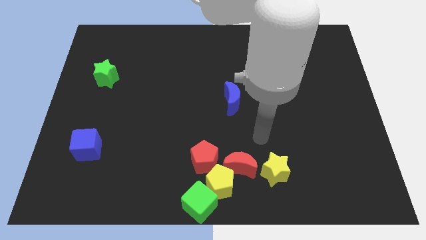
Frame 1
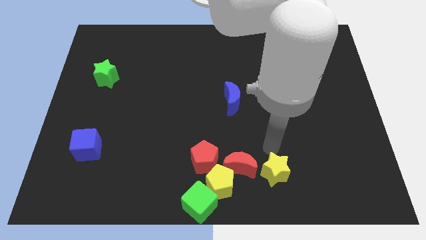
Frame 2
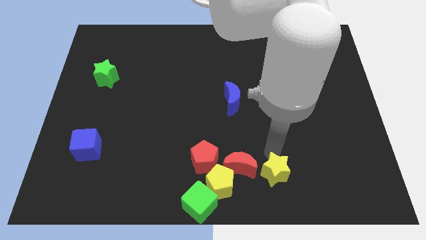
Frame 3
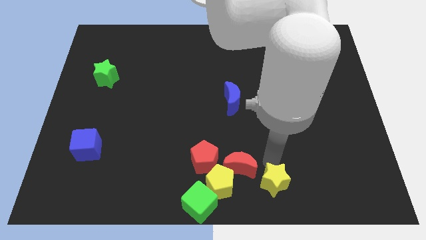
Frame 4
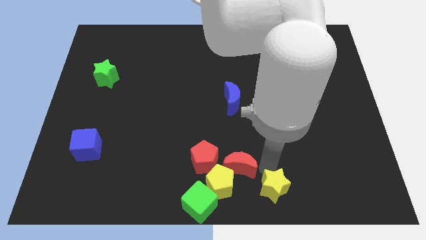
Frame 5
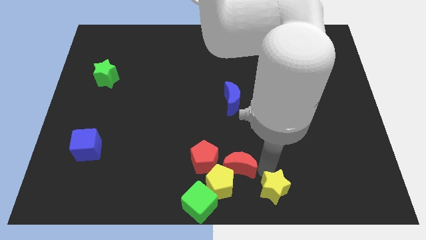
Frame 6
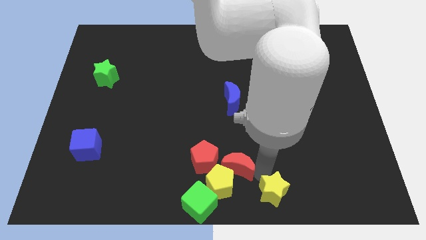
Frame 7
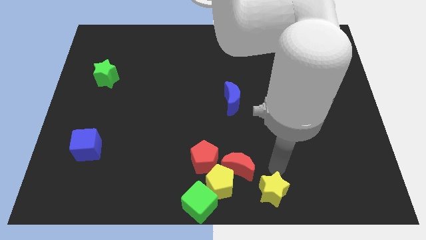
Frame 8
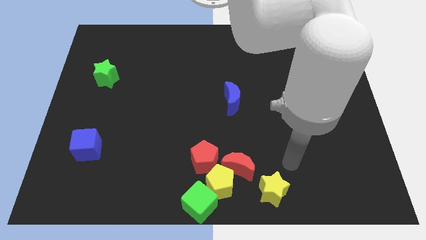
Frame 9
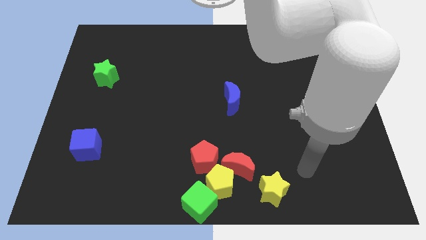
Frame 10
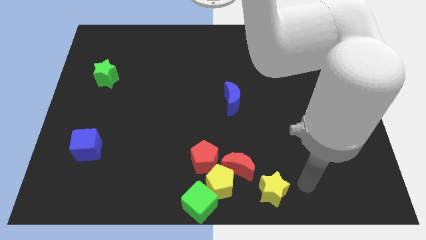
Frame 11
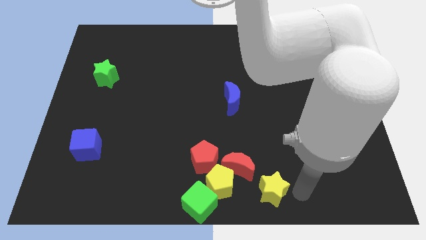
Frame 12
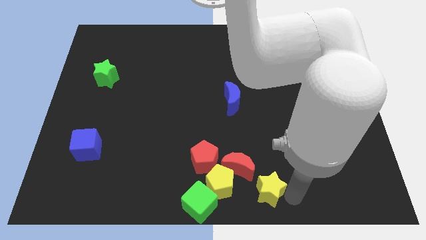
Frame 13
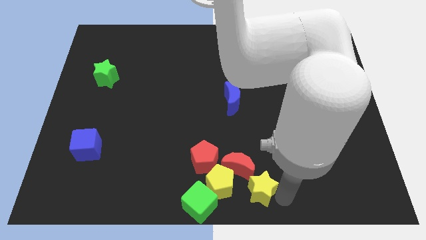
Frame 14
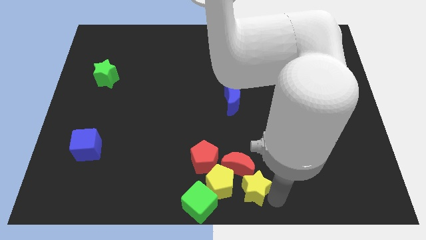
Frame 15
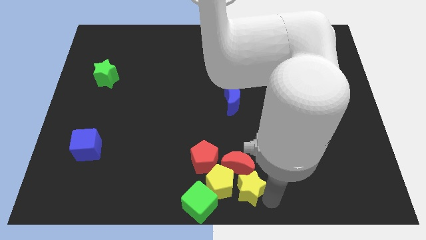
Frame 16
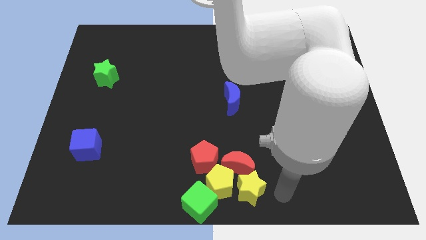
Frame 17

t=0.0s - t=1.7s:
slide the yellow star to the right side of the yellow pentagon

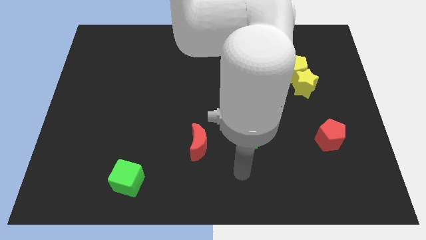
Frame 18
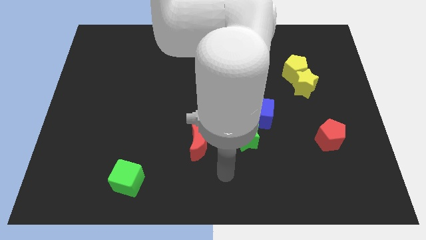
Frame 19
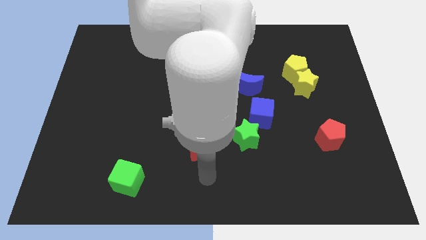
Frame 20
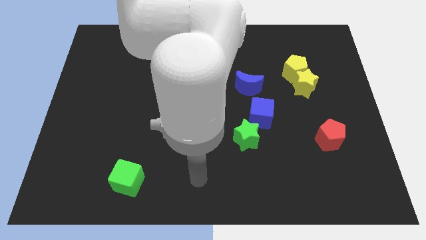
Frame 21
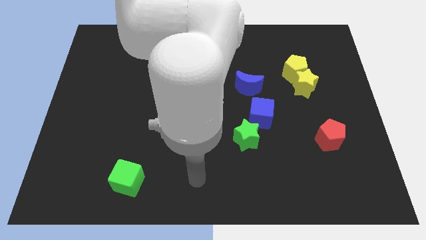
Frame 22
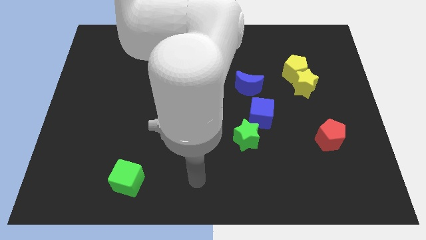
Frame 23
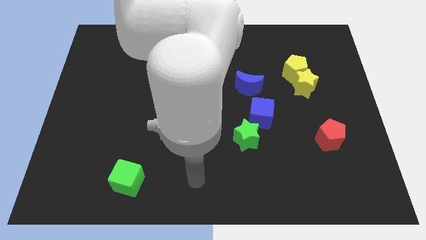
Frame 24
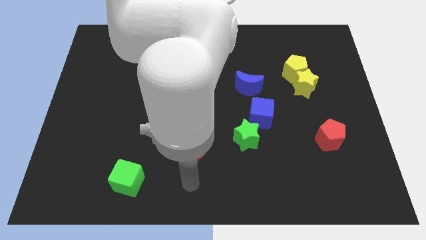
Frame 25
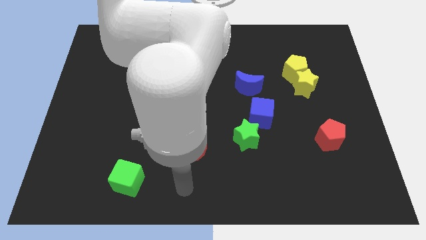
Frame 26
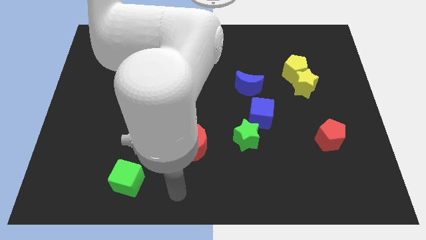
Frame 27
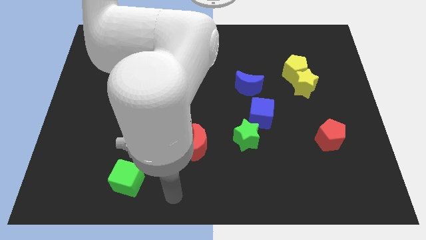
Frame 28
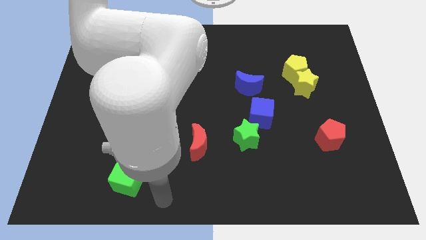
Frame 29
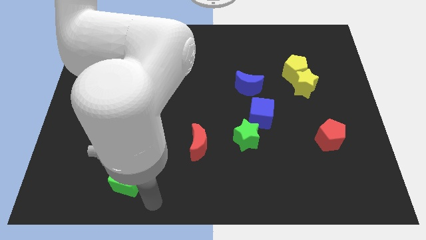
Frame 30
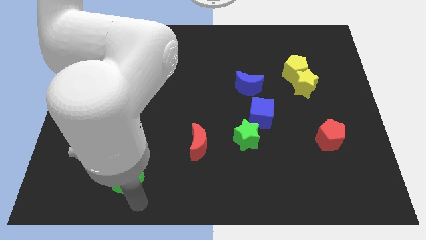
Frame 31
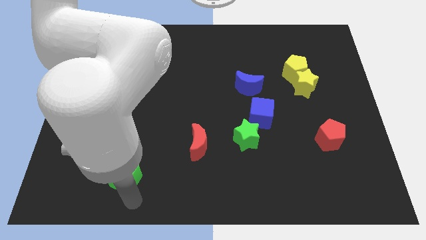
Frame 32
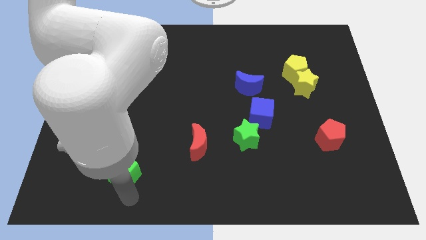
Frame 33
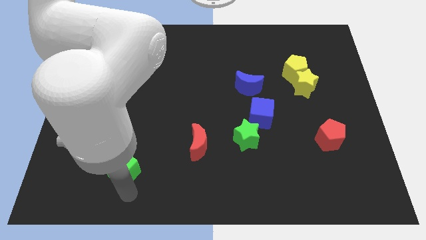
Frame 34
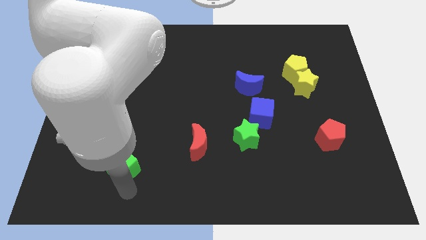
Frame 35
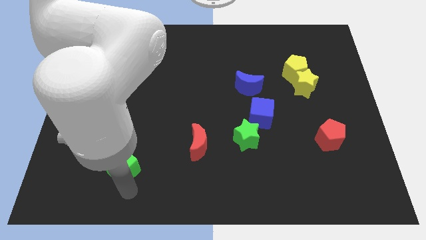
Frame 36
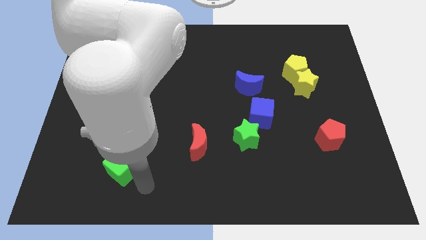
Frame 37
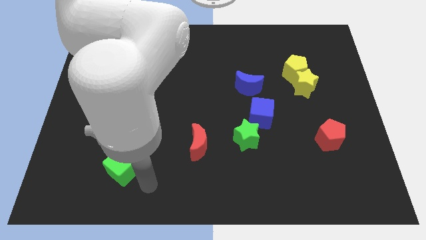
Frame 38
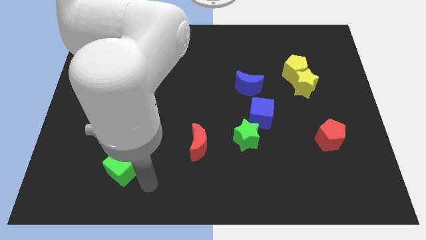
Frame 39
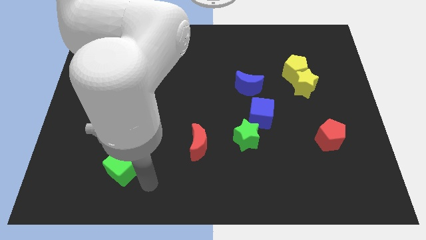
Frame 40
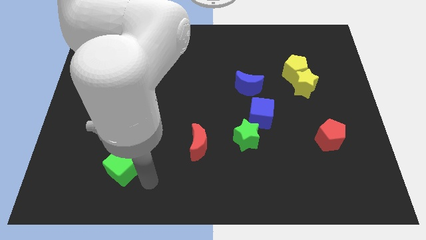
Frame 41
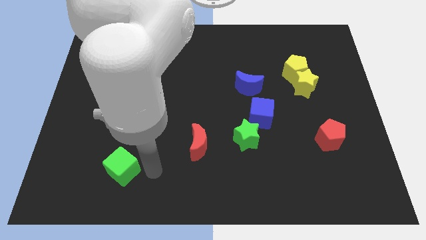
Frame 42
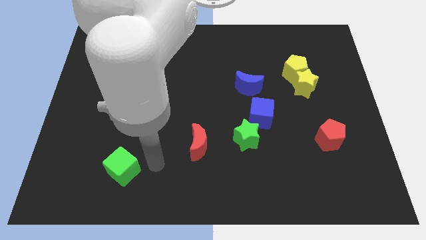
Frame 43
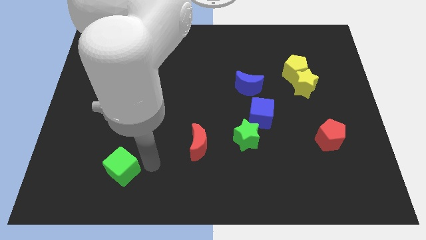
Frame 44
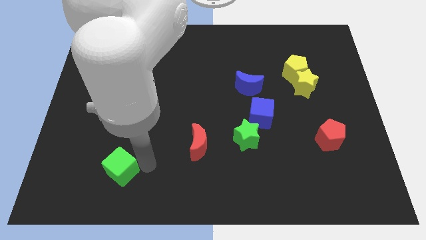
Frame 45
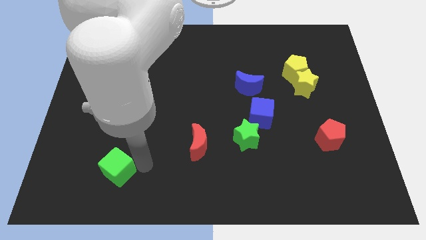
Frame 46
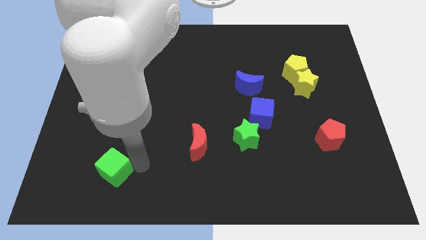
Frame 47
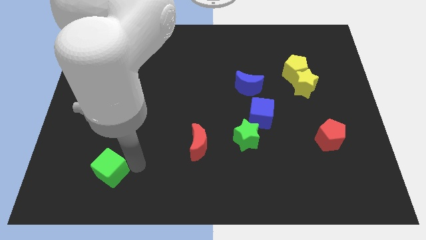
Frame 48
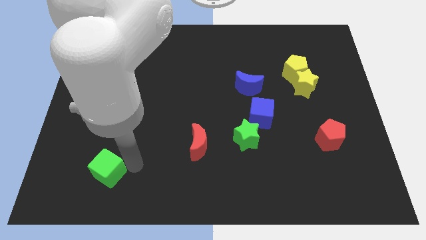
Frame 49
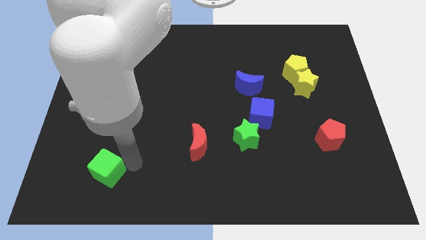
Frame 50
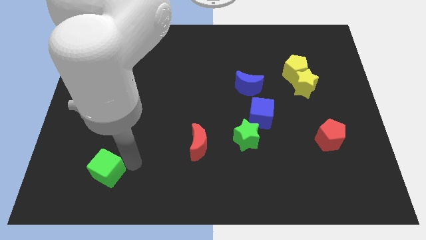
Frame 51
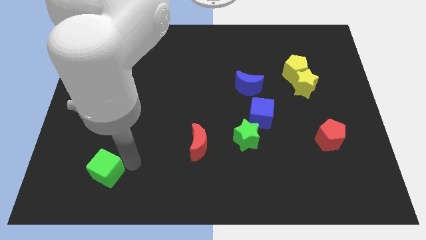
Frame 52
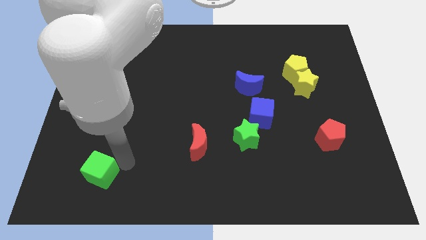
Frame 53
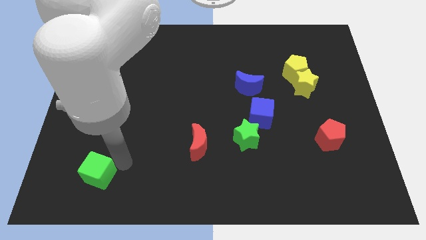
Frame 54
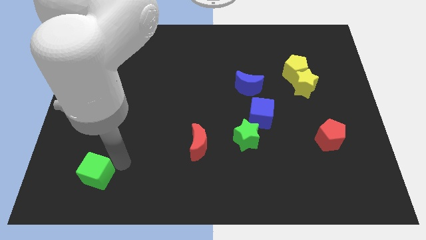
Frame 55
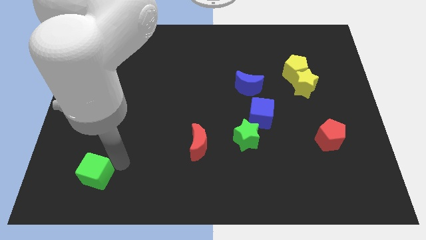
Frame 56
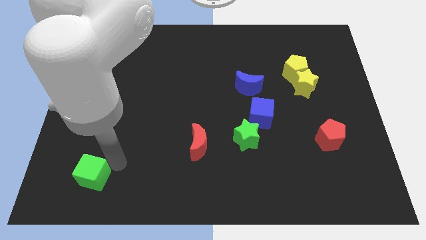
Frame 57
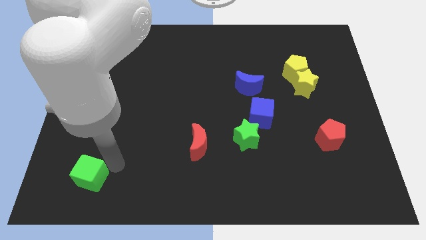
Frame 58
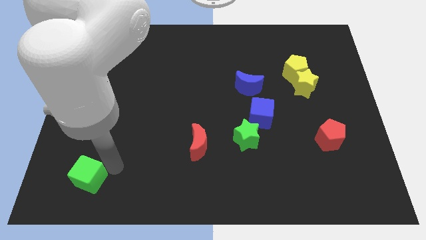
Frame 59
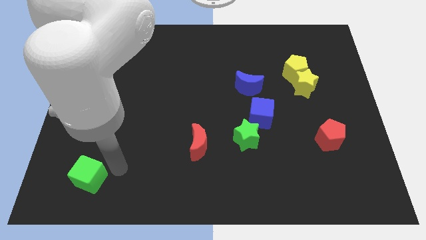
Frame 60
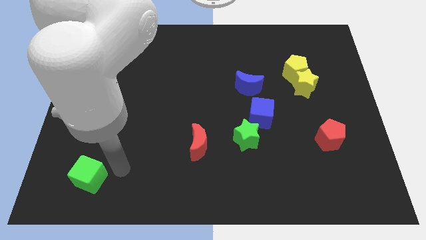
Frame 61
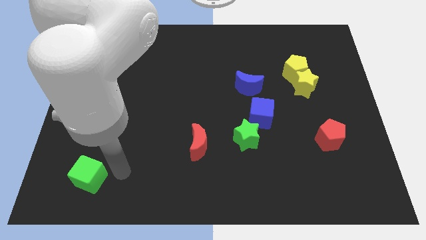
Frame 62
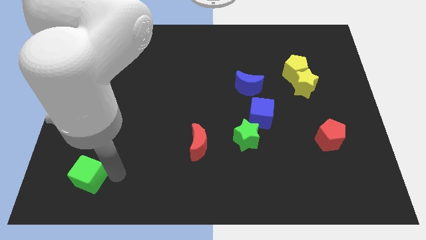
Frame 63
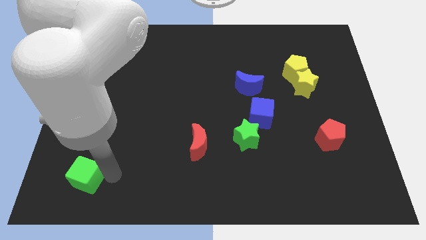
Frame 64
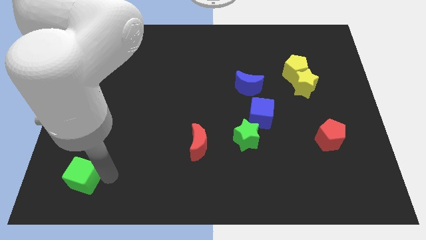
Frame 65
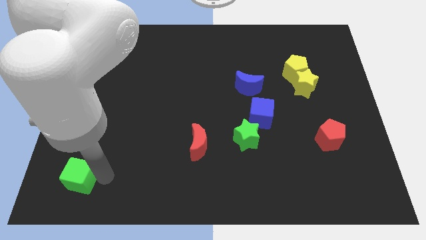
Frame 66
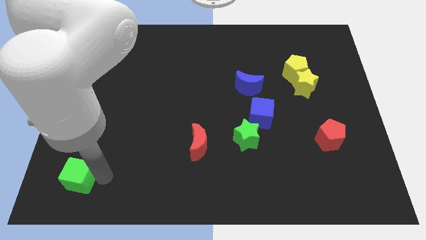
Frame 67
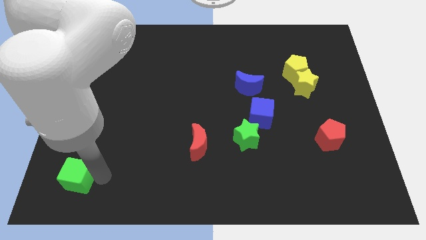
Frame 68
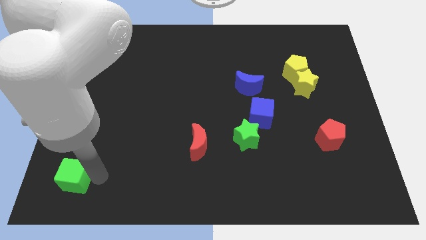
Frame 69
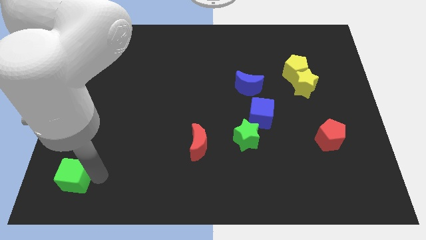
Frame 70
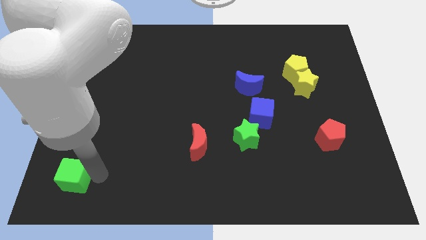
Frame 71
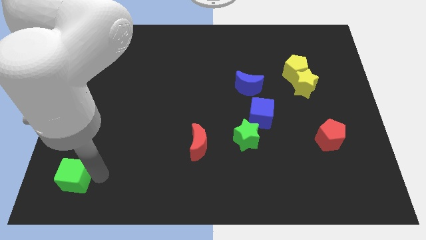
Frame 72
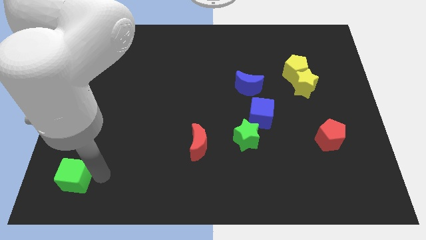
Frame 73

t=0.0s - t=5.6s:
move green cube towards the bottom left corner of the board

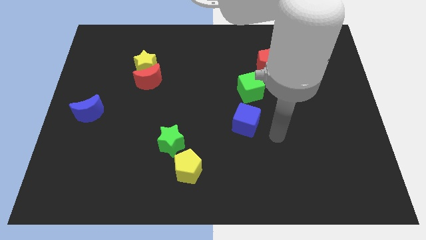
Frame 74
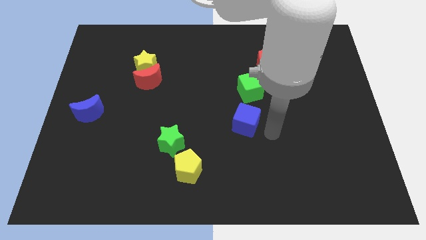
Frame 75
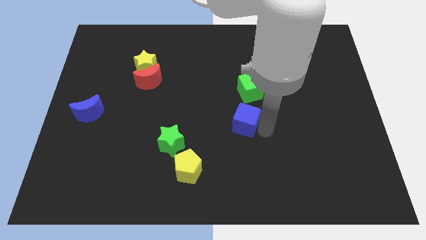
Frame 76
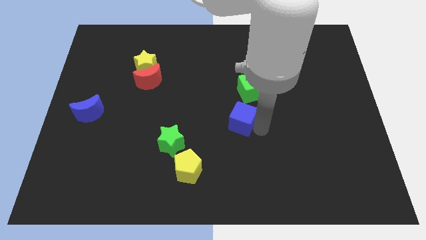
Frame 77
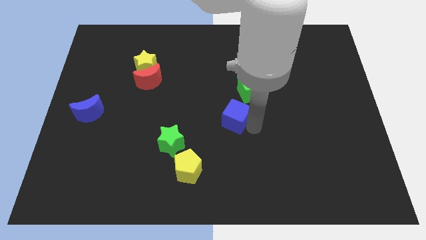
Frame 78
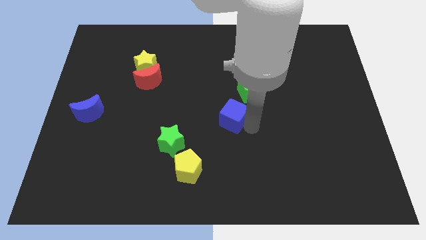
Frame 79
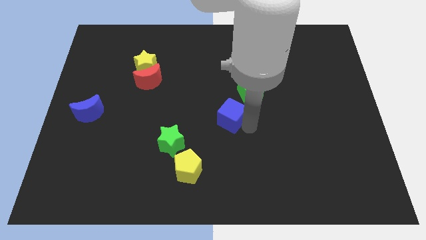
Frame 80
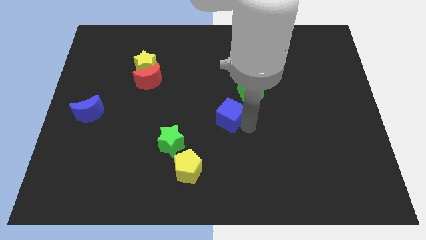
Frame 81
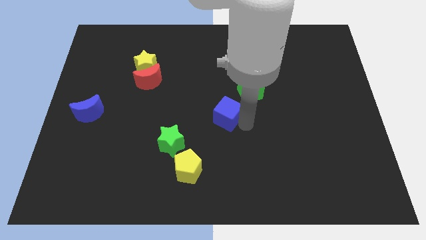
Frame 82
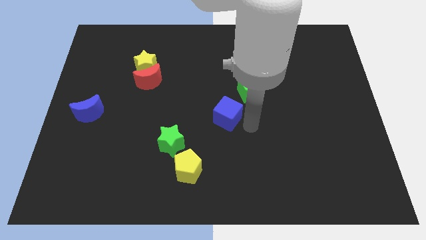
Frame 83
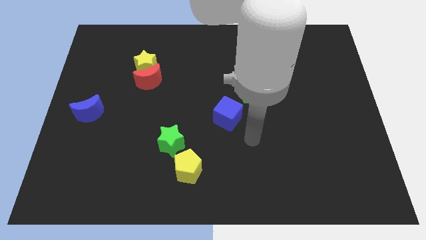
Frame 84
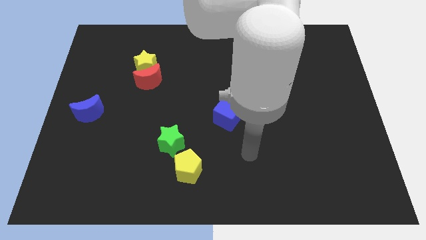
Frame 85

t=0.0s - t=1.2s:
move the blue cube to the center of the board

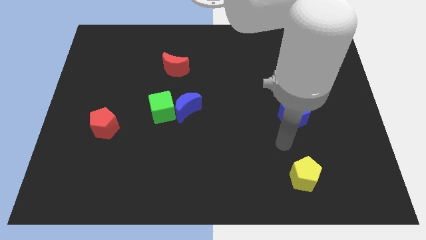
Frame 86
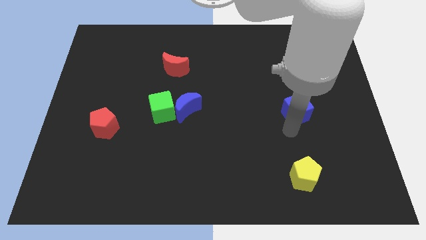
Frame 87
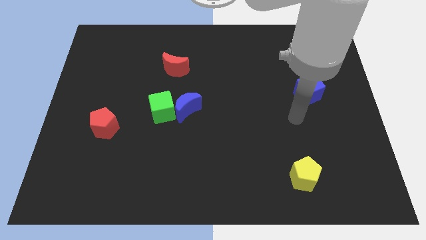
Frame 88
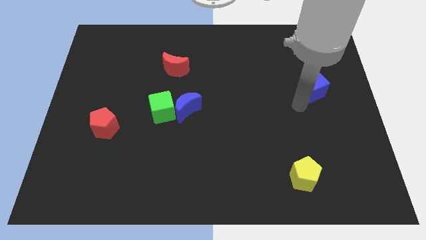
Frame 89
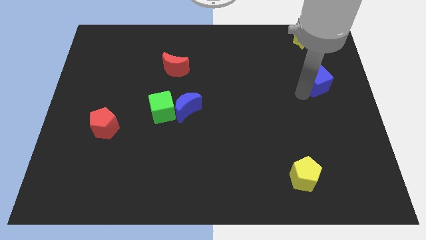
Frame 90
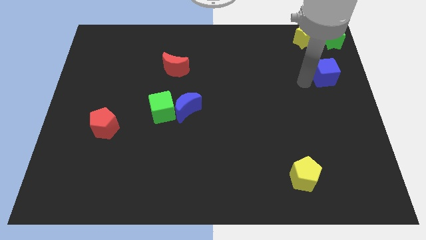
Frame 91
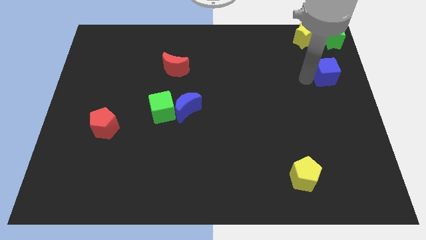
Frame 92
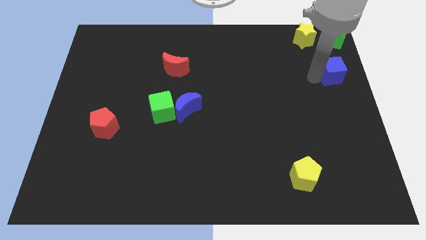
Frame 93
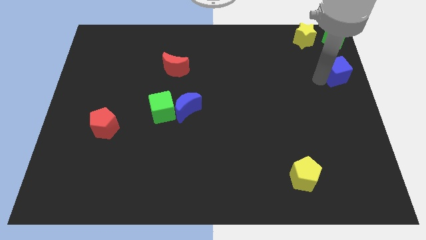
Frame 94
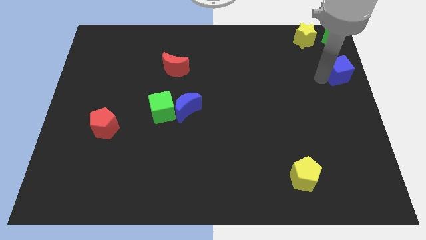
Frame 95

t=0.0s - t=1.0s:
place blue cube vertical to green star
